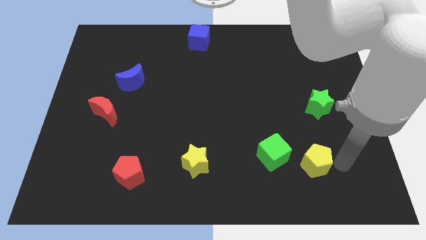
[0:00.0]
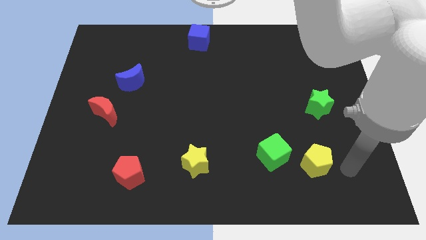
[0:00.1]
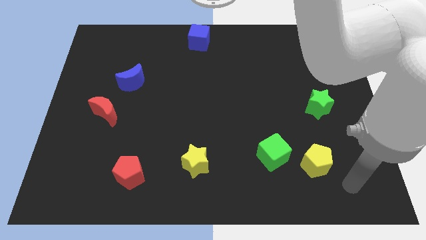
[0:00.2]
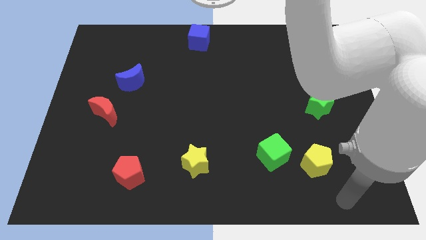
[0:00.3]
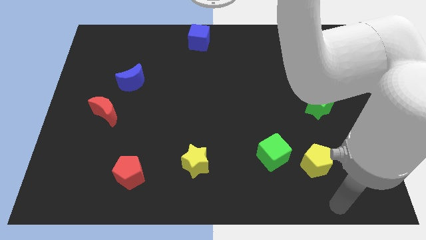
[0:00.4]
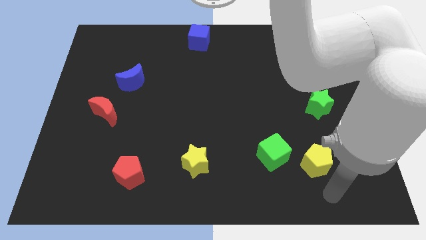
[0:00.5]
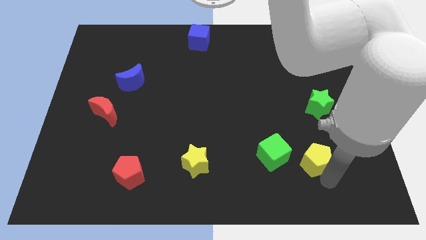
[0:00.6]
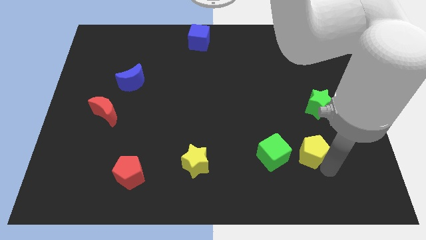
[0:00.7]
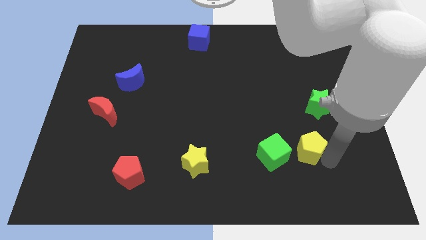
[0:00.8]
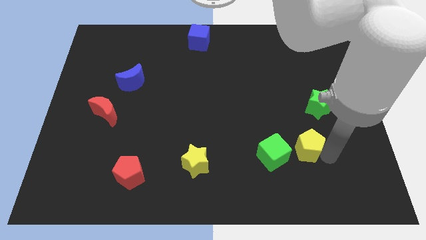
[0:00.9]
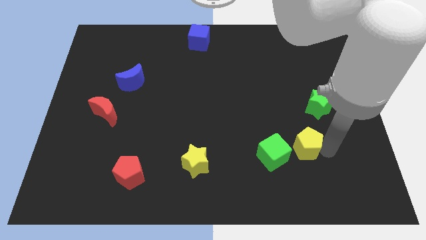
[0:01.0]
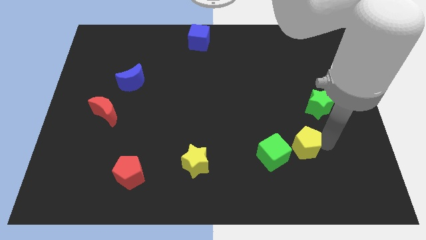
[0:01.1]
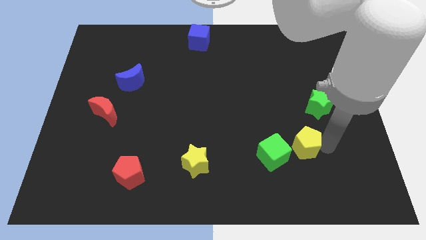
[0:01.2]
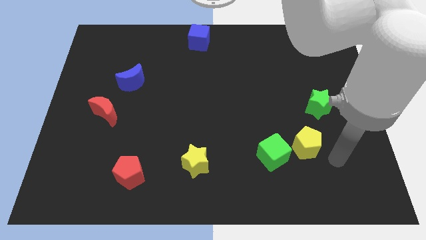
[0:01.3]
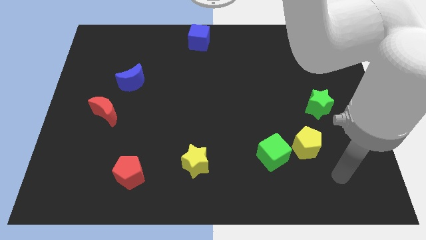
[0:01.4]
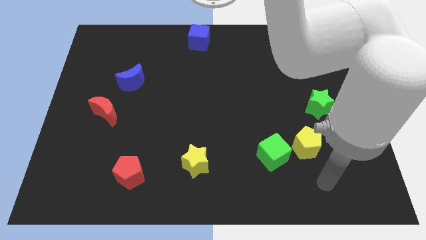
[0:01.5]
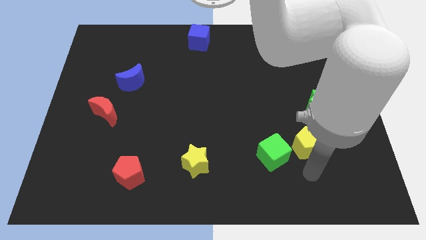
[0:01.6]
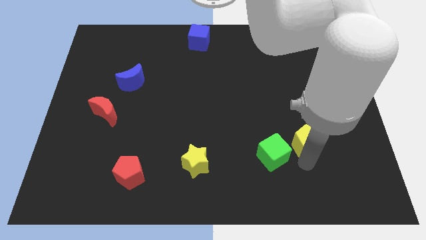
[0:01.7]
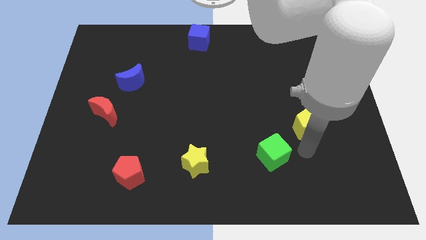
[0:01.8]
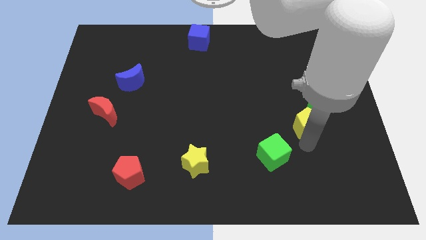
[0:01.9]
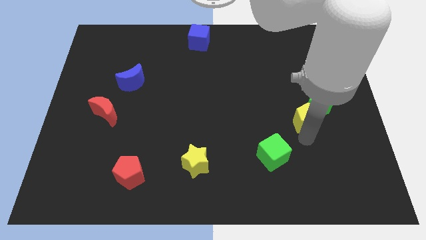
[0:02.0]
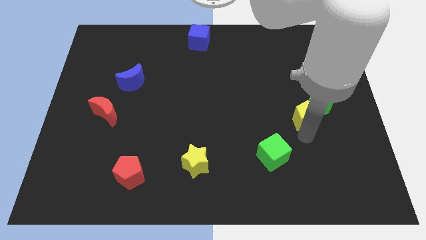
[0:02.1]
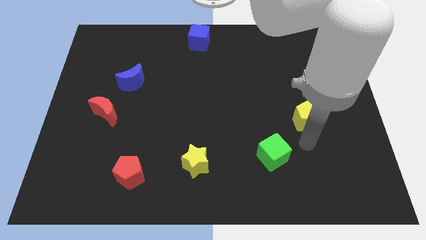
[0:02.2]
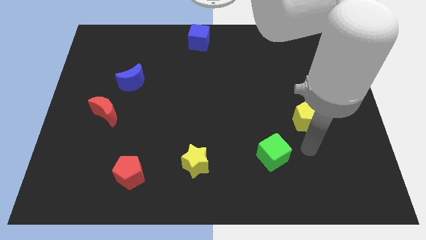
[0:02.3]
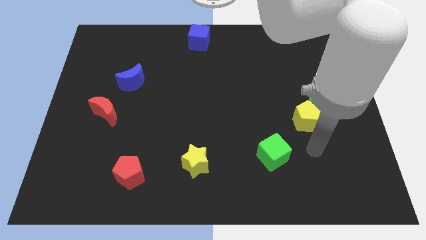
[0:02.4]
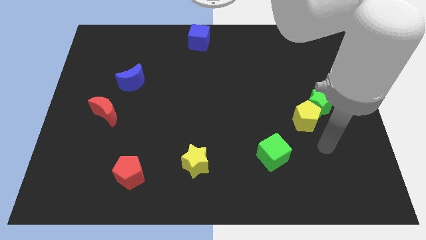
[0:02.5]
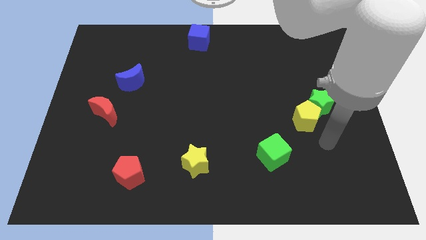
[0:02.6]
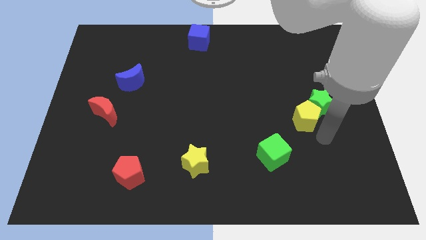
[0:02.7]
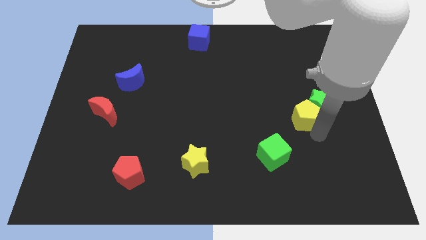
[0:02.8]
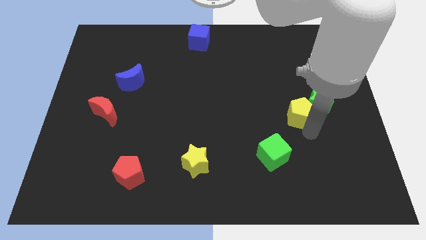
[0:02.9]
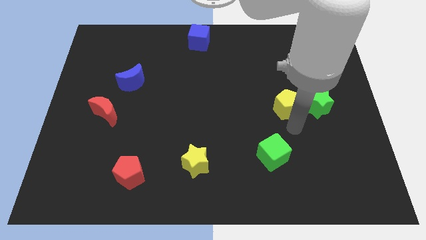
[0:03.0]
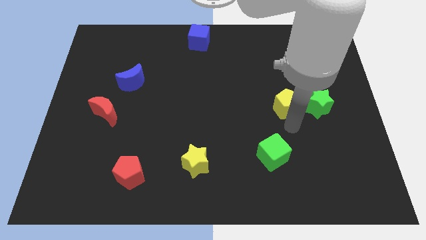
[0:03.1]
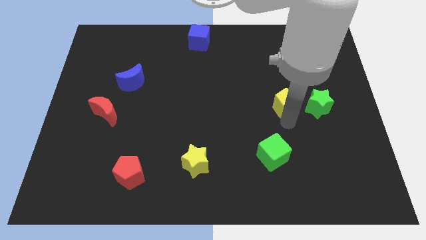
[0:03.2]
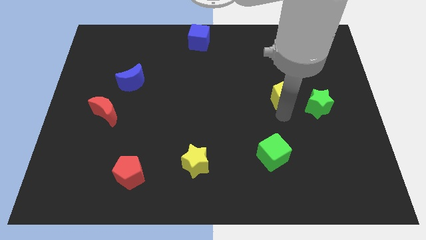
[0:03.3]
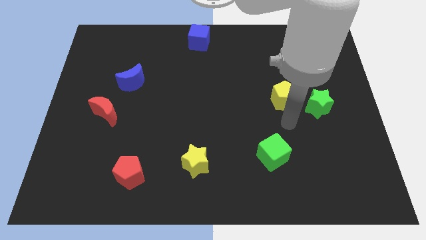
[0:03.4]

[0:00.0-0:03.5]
push the yellow pentagon to the left of the green star

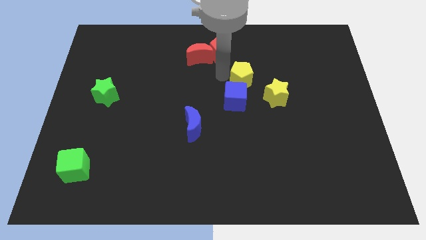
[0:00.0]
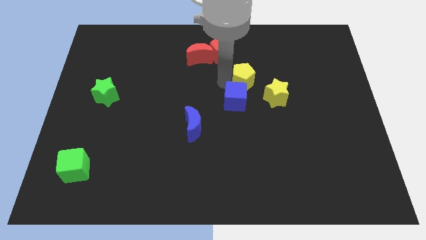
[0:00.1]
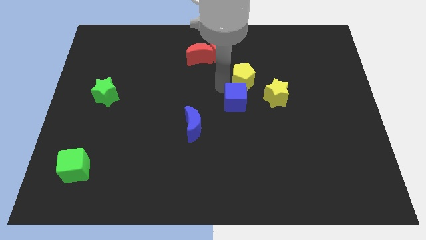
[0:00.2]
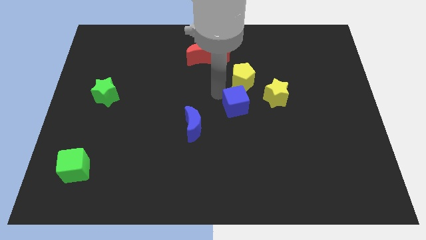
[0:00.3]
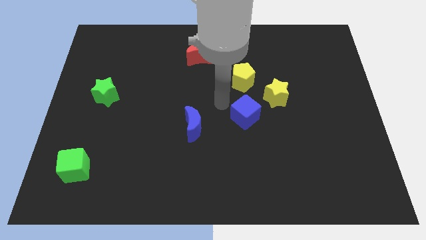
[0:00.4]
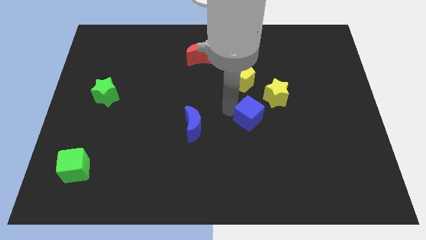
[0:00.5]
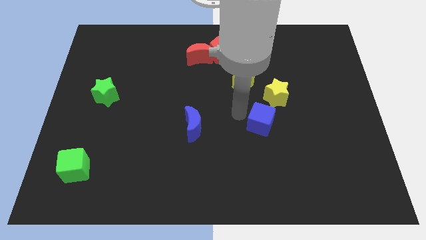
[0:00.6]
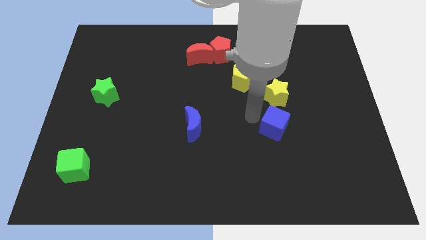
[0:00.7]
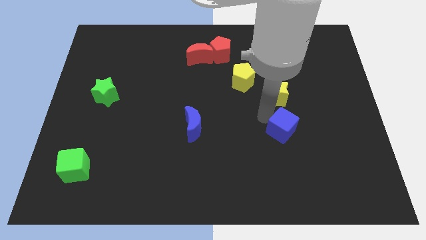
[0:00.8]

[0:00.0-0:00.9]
place the blue cube towards the bottom of the yellow star

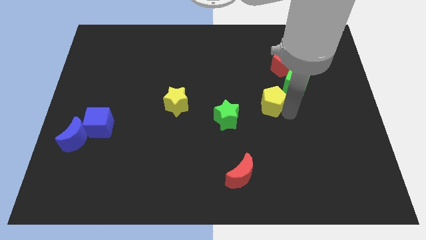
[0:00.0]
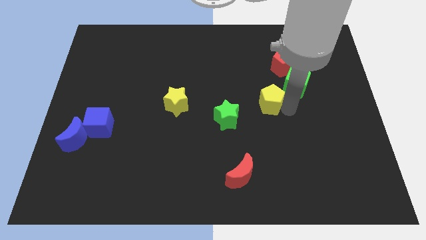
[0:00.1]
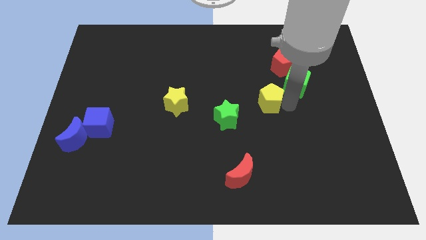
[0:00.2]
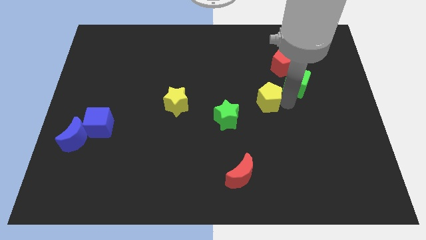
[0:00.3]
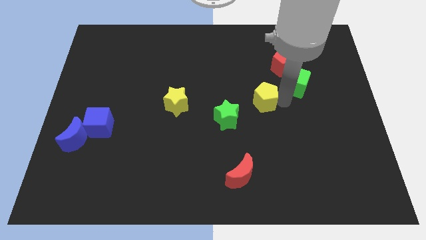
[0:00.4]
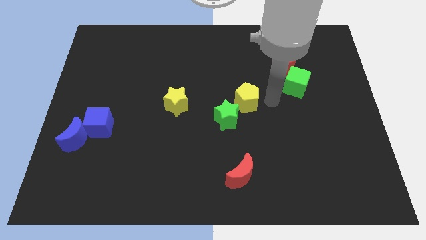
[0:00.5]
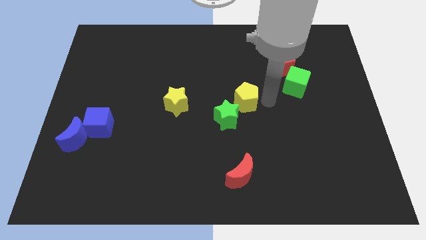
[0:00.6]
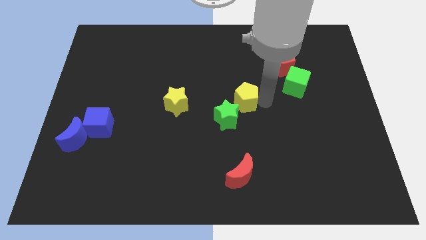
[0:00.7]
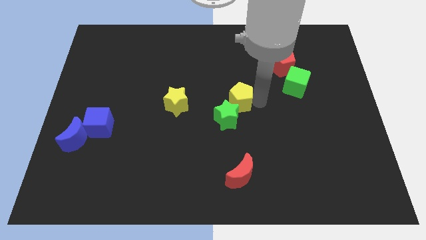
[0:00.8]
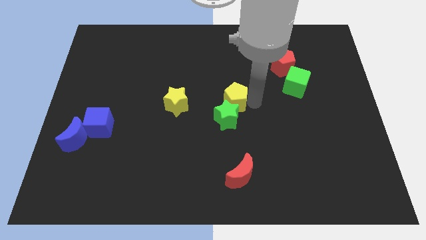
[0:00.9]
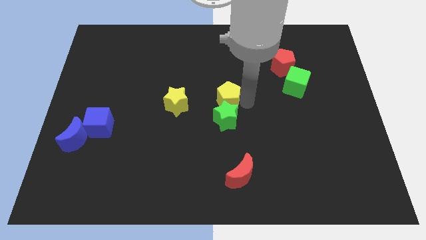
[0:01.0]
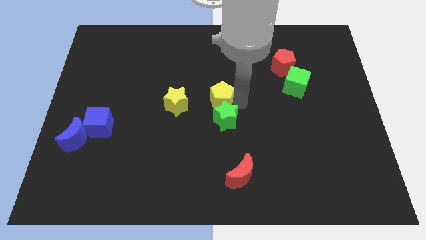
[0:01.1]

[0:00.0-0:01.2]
place the yellow pentagon above the green star

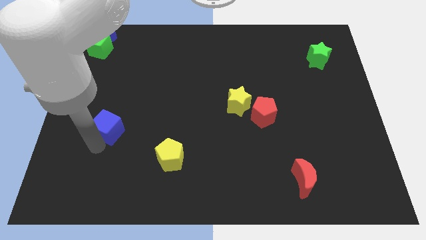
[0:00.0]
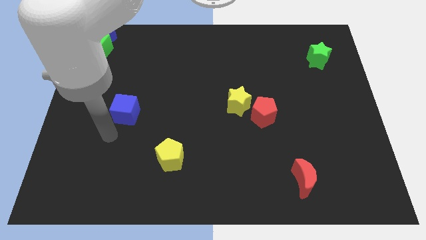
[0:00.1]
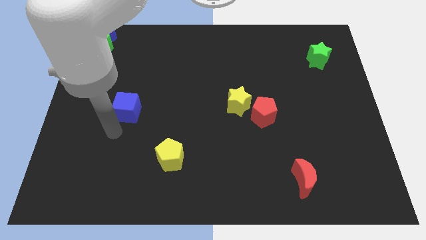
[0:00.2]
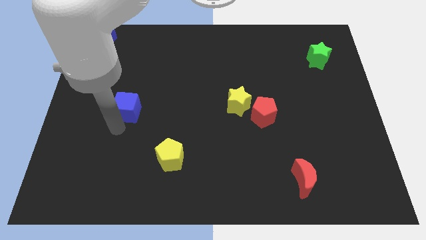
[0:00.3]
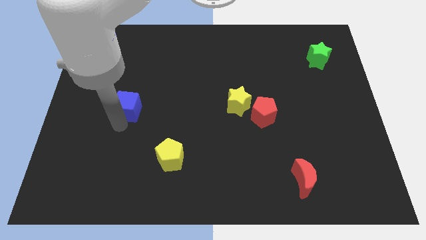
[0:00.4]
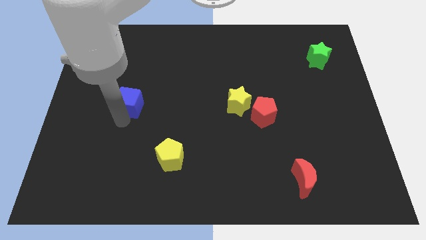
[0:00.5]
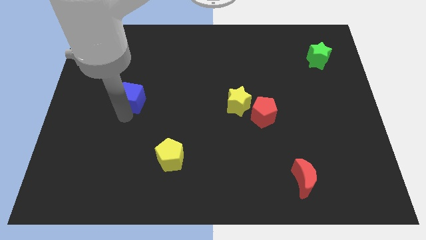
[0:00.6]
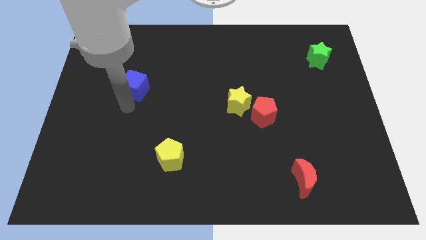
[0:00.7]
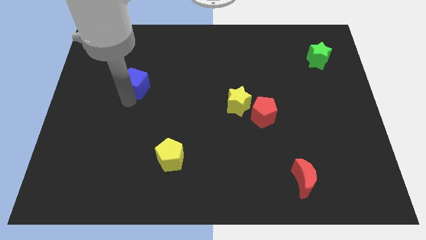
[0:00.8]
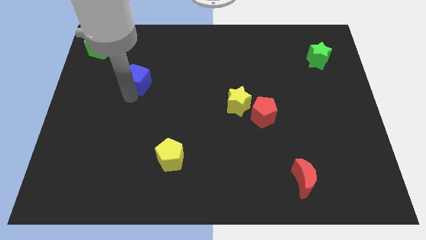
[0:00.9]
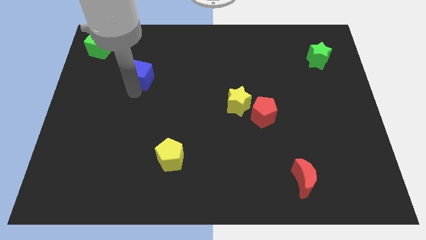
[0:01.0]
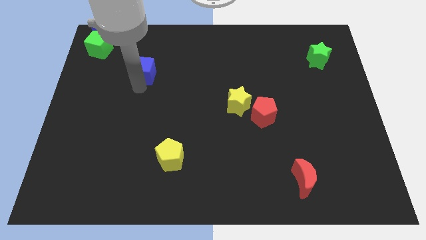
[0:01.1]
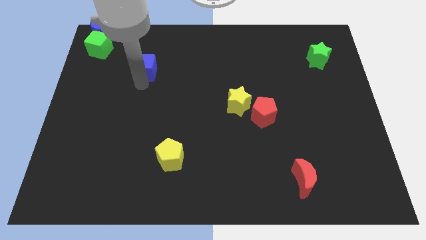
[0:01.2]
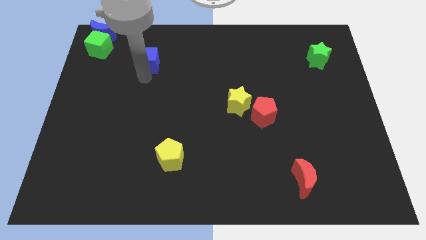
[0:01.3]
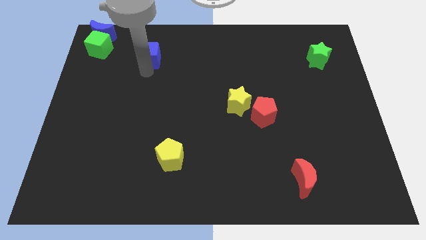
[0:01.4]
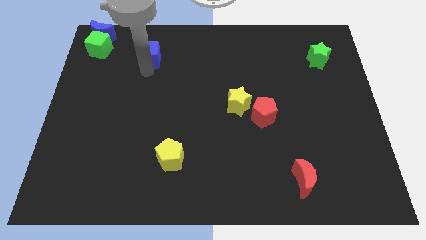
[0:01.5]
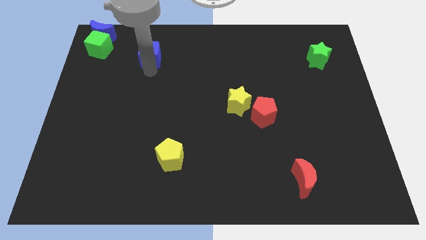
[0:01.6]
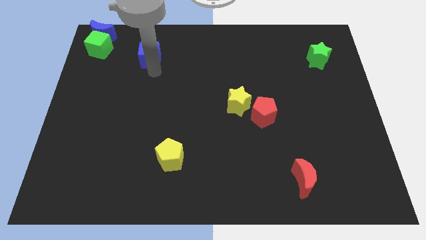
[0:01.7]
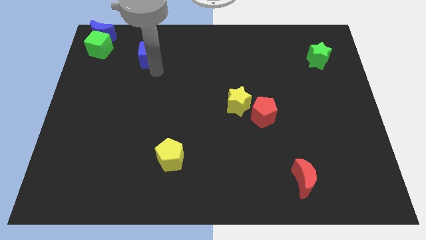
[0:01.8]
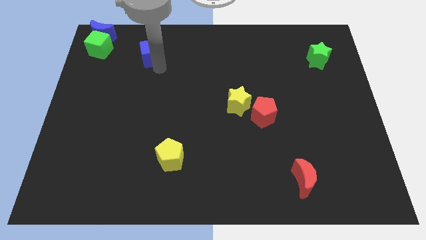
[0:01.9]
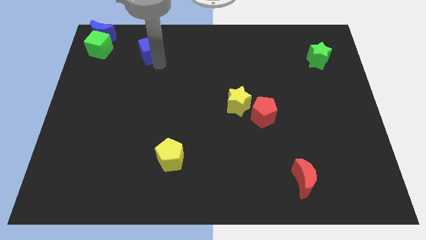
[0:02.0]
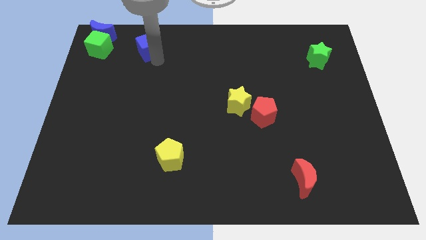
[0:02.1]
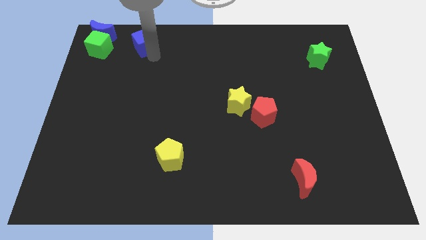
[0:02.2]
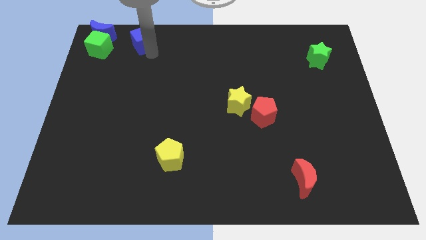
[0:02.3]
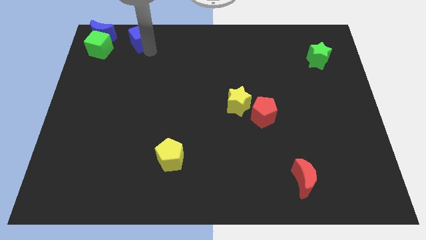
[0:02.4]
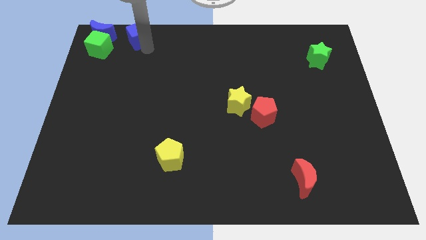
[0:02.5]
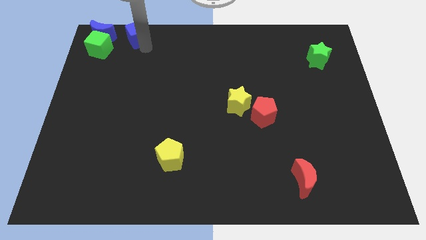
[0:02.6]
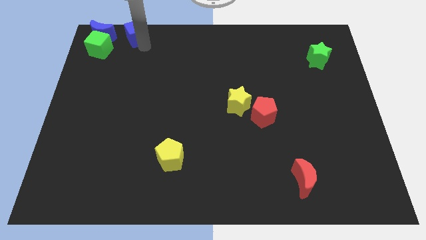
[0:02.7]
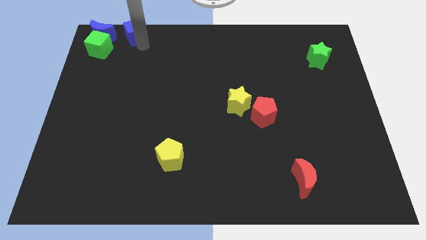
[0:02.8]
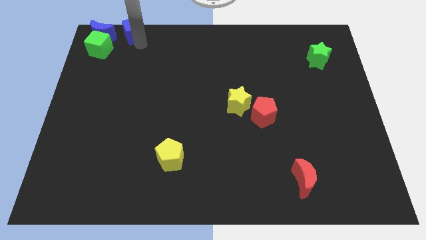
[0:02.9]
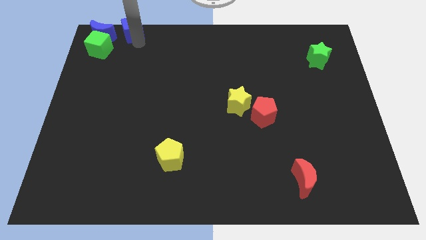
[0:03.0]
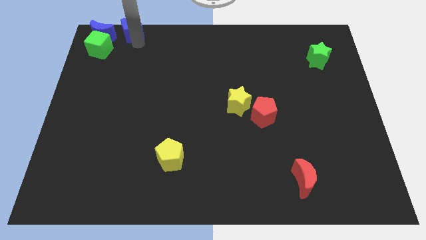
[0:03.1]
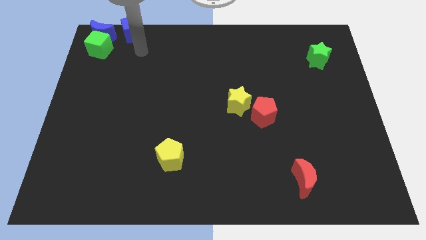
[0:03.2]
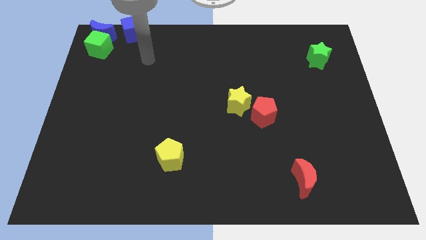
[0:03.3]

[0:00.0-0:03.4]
place blue cube to the right of blue moon

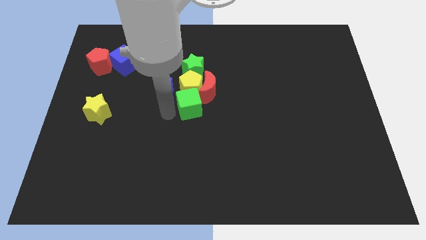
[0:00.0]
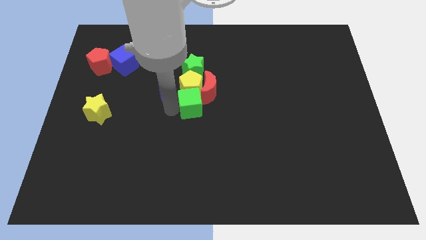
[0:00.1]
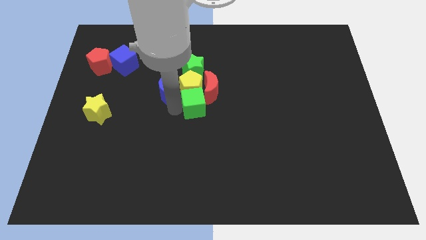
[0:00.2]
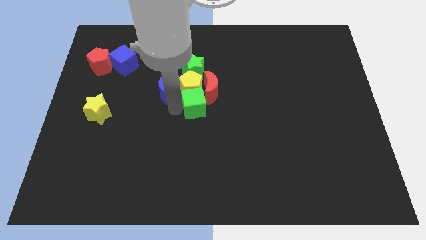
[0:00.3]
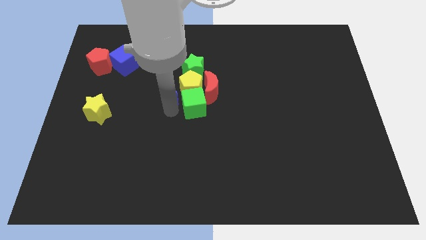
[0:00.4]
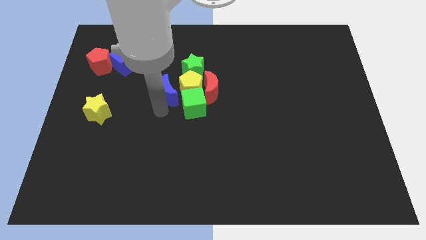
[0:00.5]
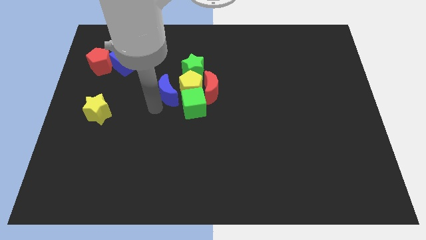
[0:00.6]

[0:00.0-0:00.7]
slide the green cube to the right side of the board
